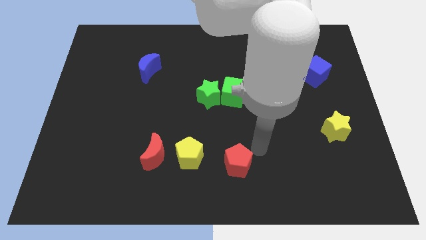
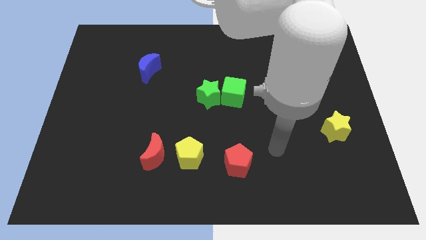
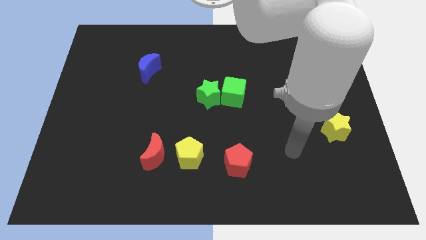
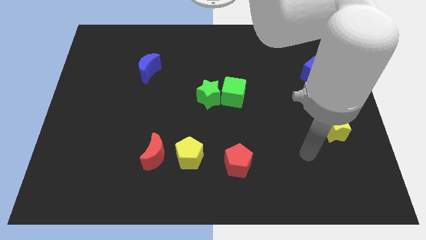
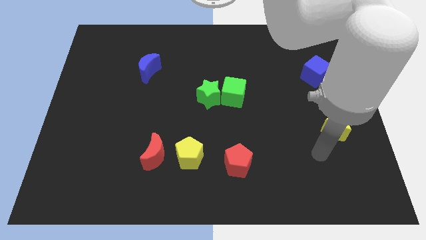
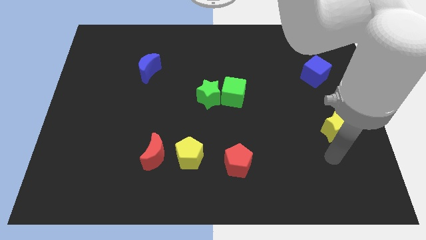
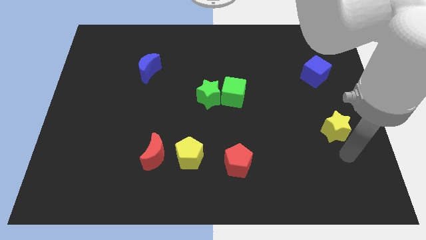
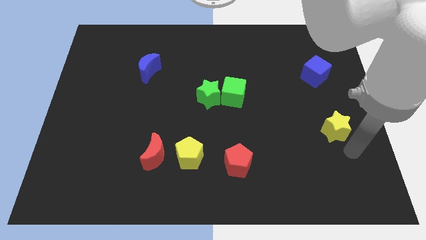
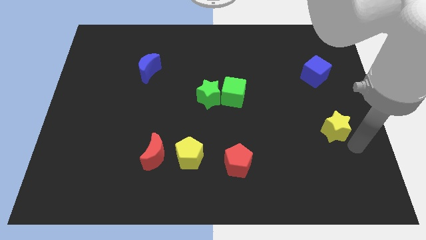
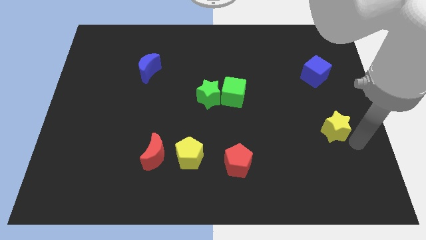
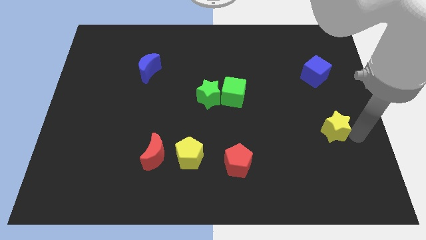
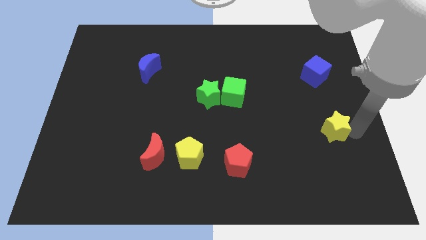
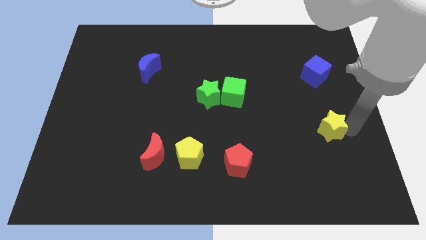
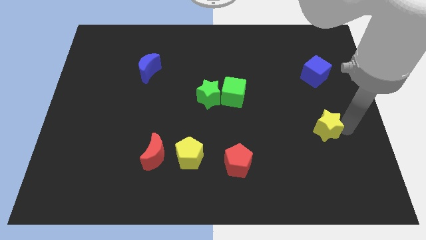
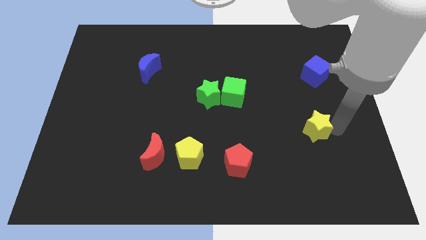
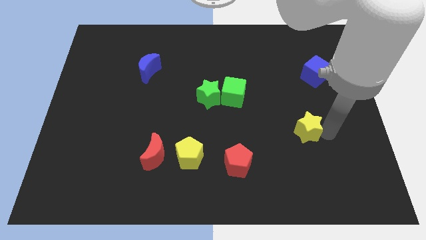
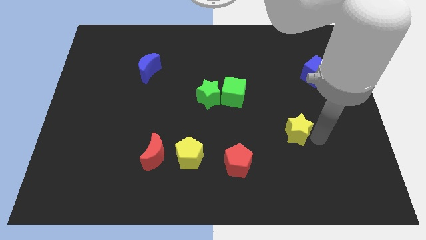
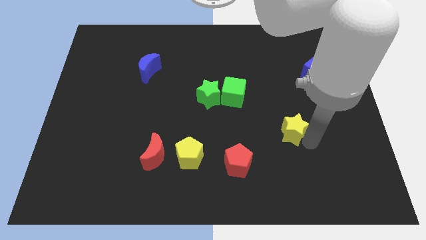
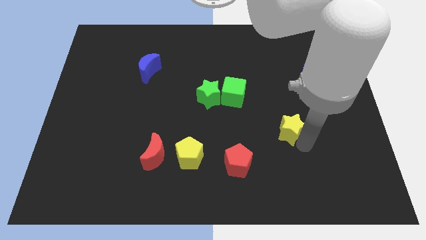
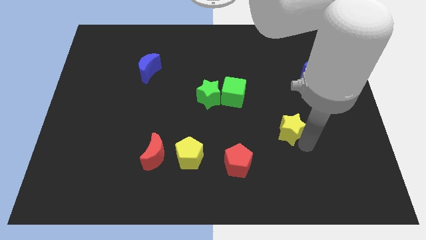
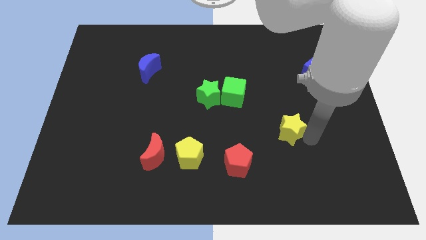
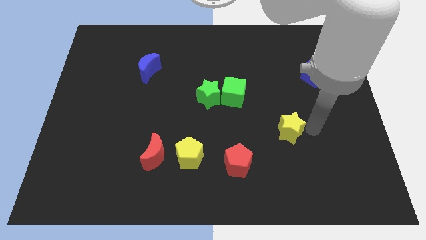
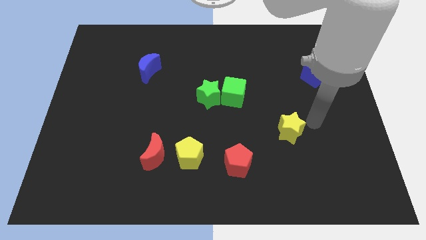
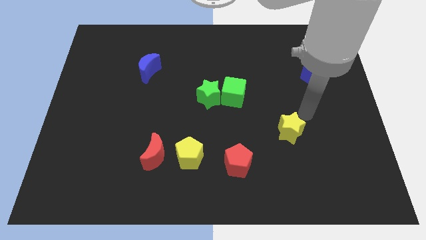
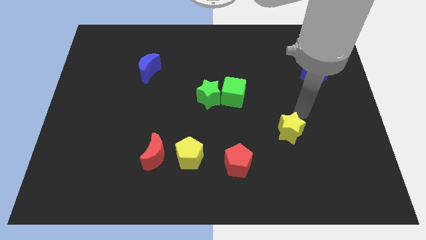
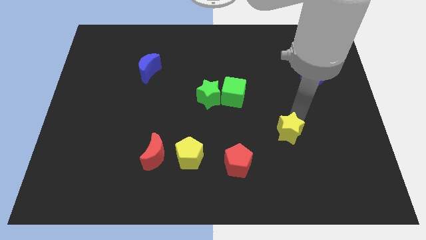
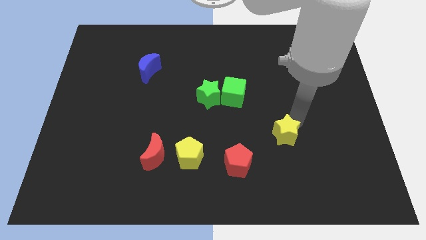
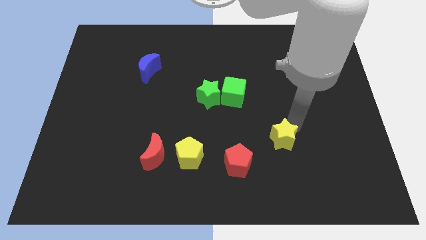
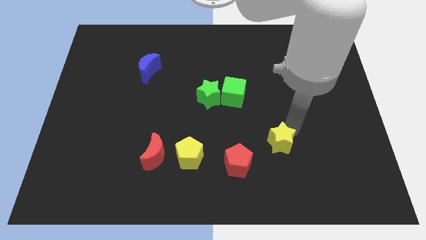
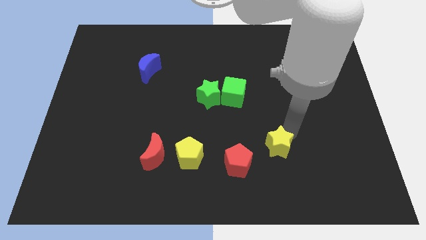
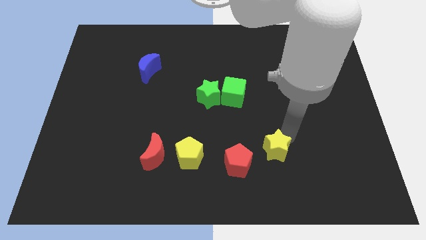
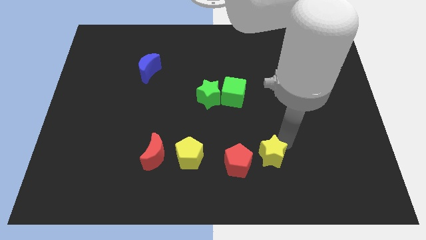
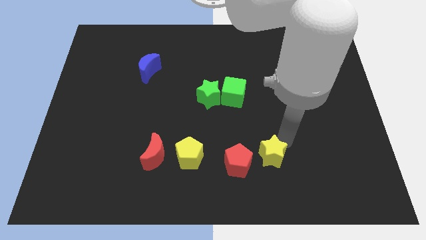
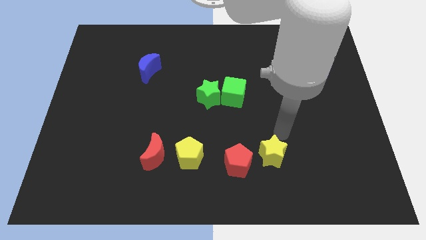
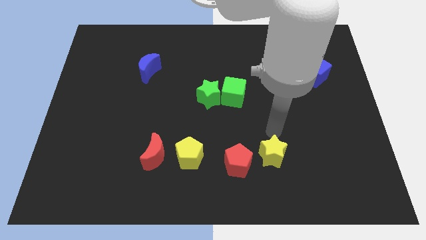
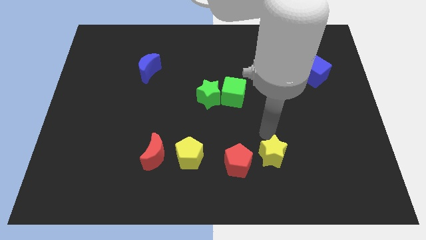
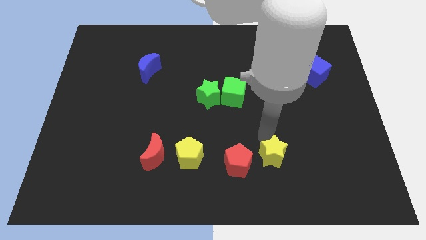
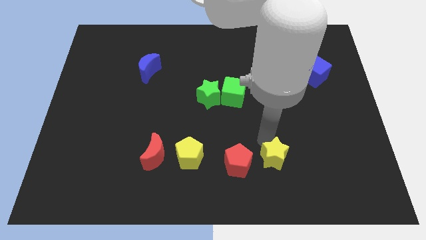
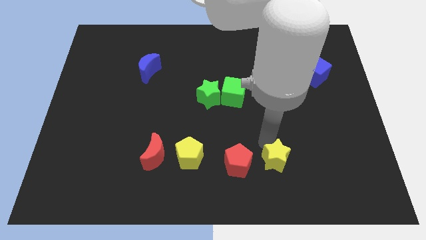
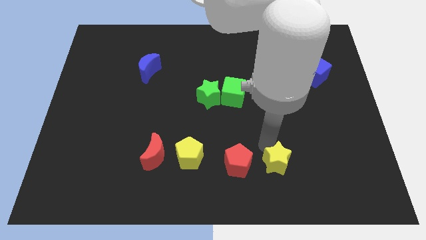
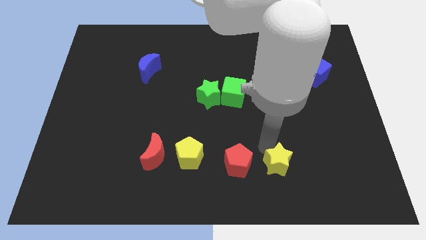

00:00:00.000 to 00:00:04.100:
put the yellow star right to the red pentagon

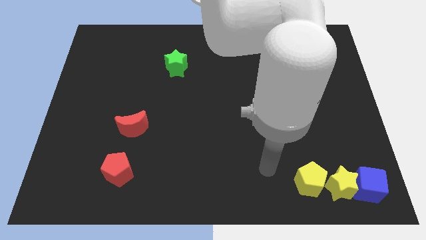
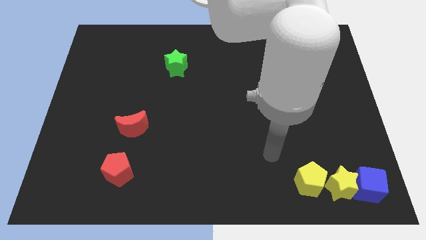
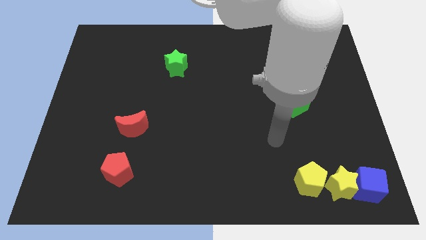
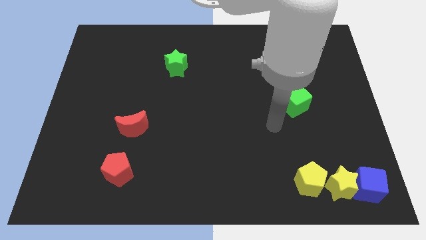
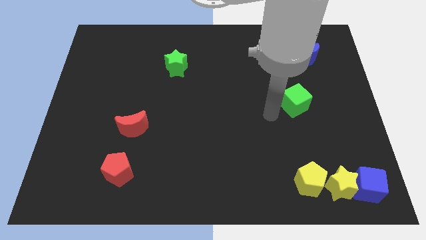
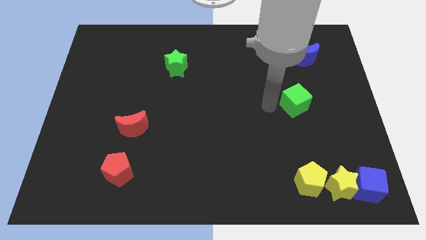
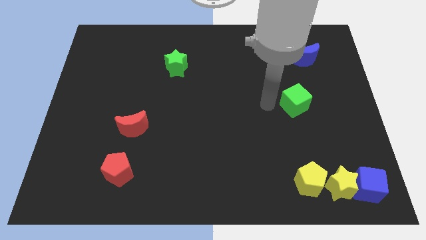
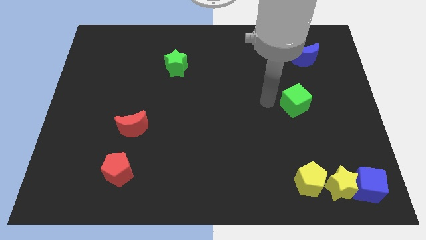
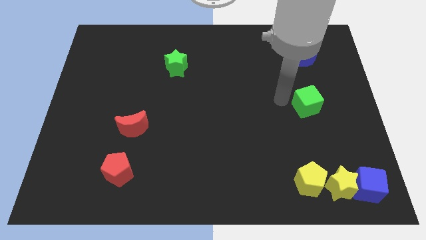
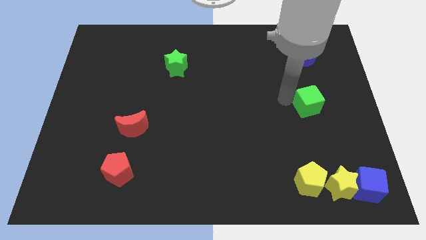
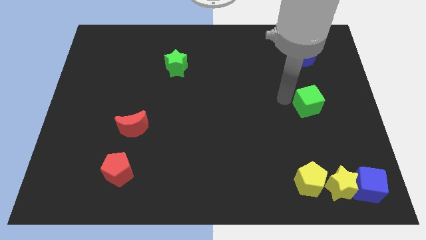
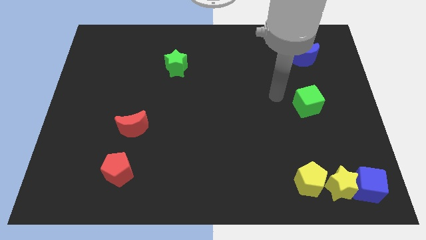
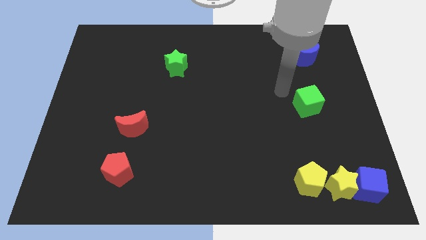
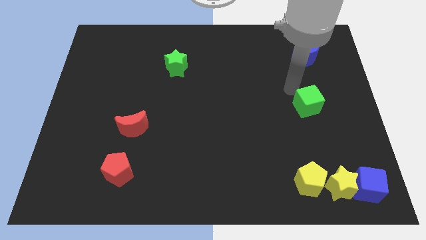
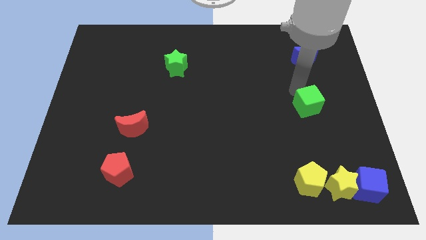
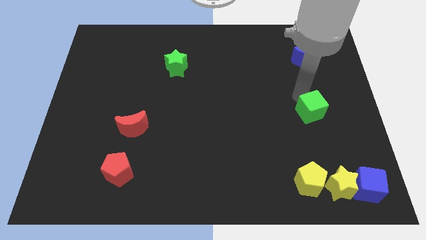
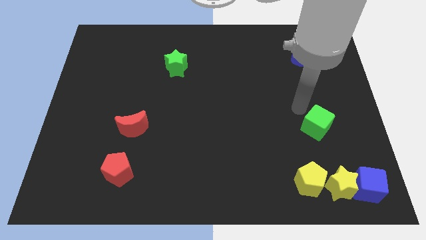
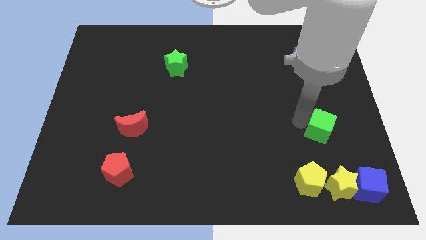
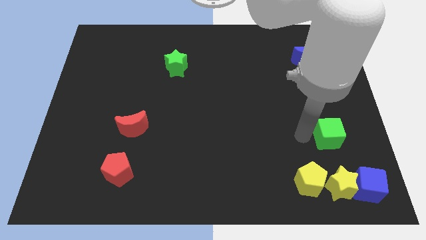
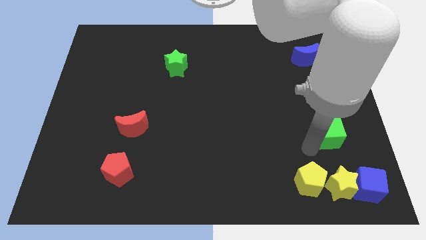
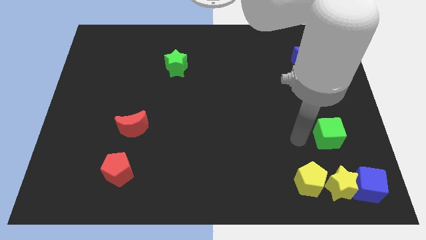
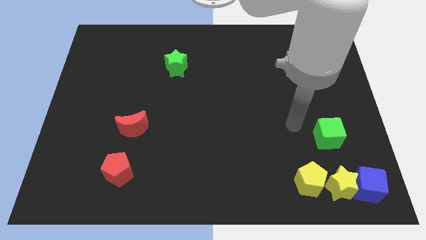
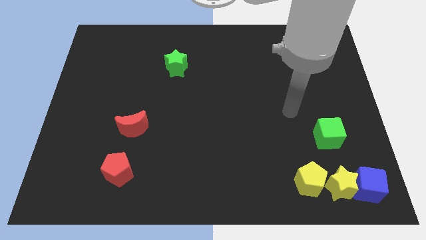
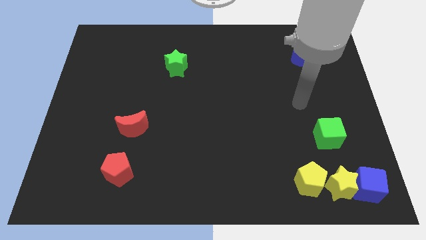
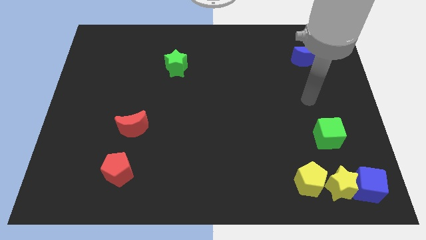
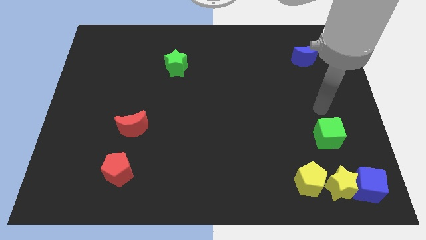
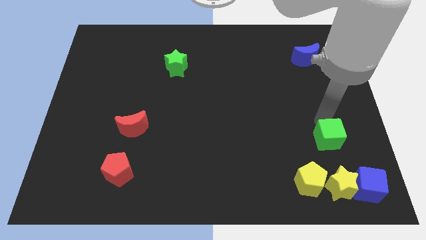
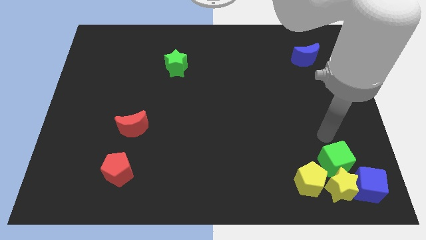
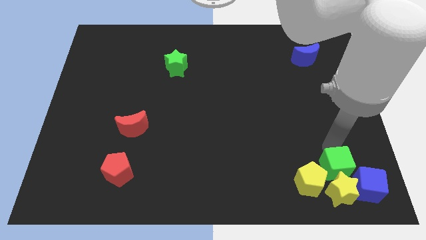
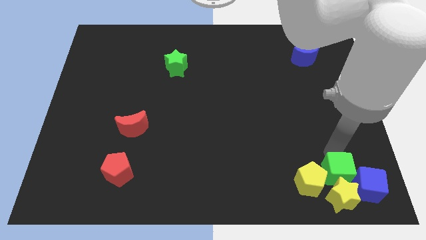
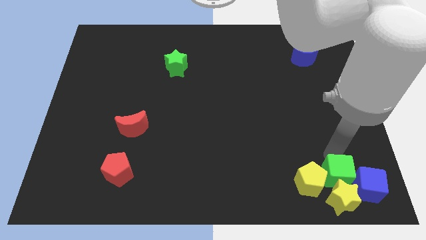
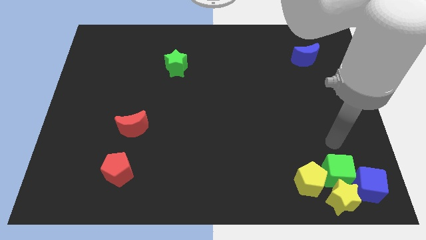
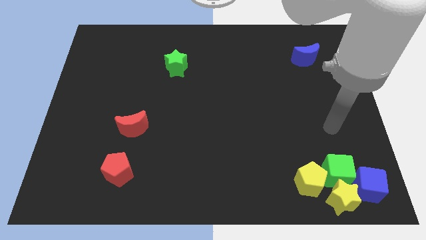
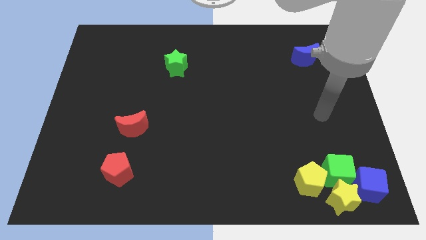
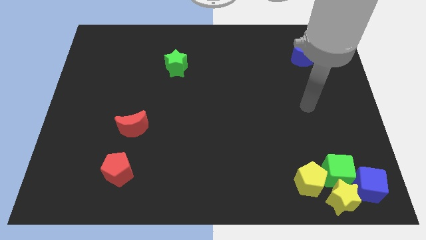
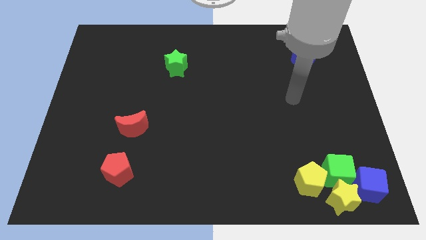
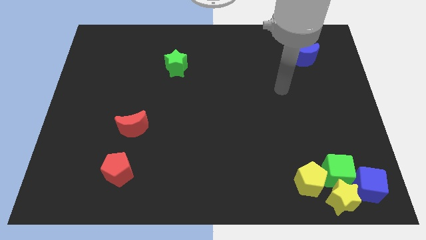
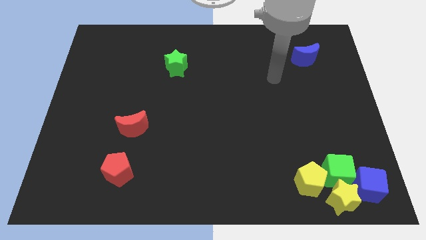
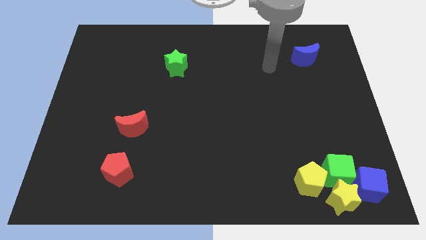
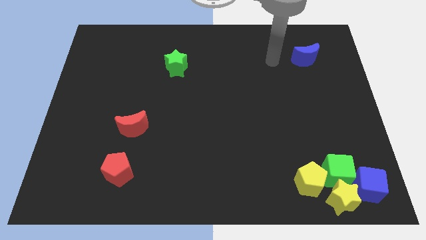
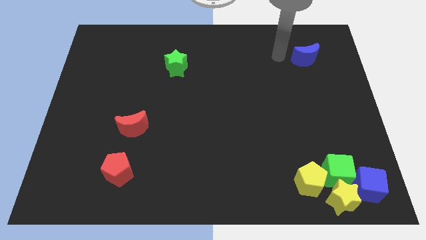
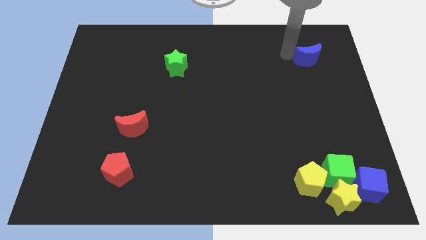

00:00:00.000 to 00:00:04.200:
move the green cube into the top of yellow star

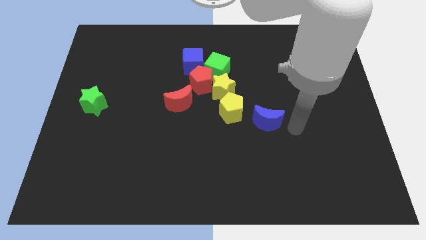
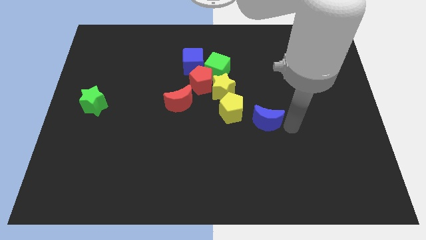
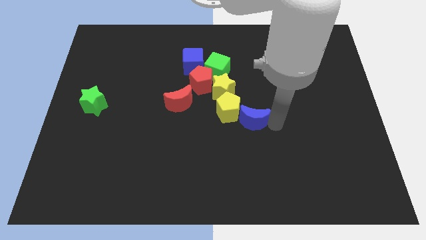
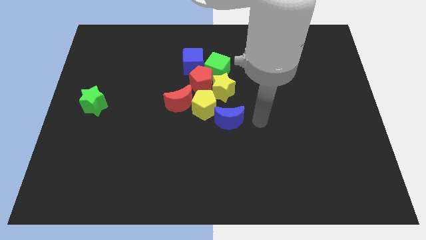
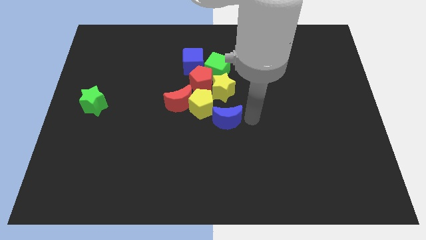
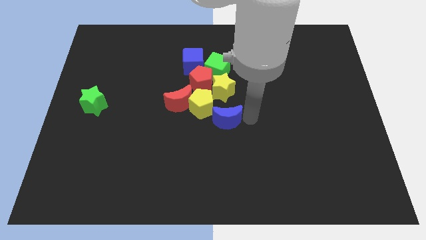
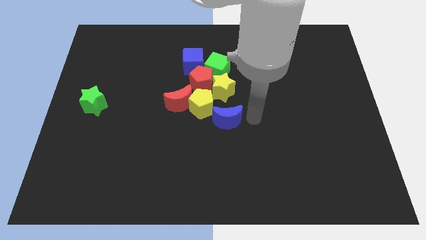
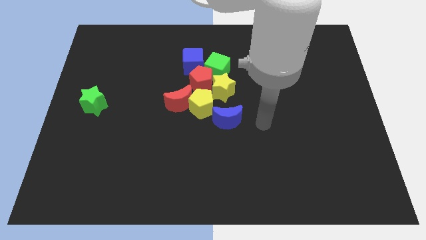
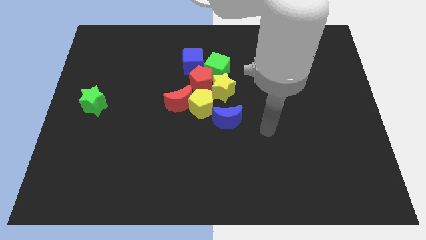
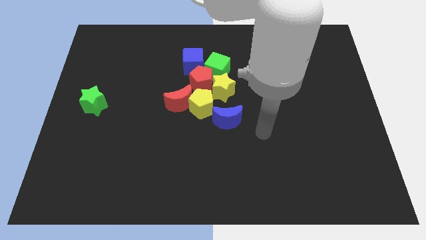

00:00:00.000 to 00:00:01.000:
push the yellow pentagon with the blue crescent towards the center of the board
